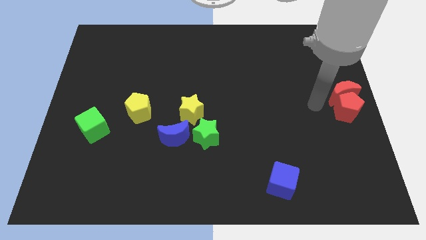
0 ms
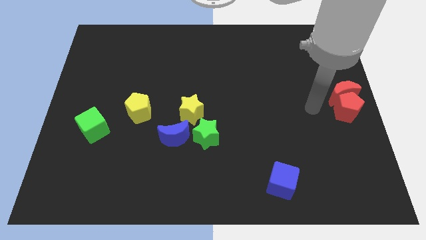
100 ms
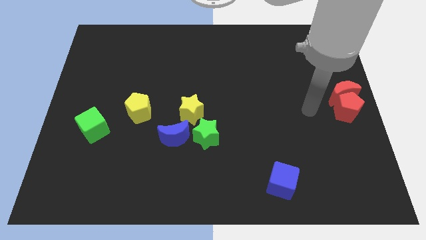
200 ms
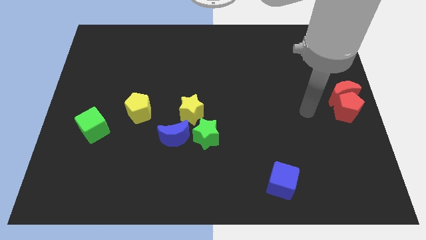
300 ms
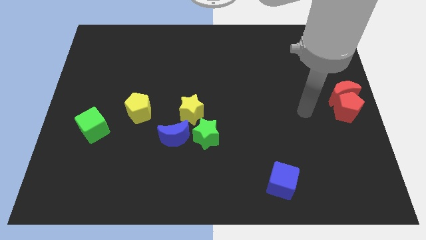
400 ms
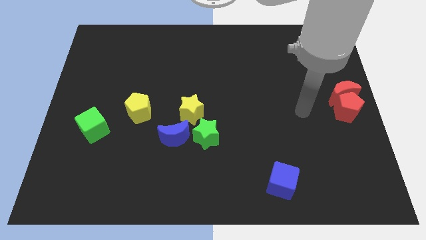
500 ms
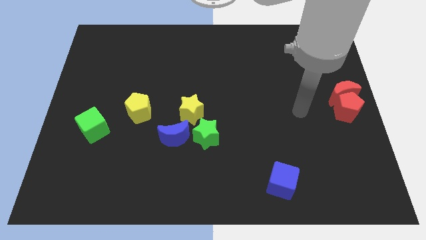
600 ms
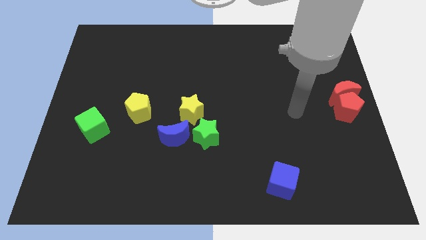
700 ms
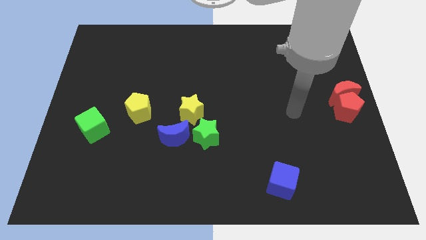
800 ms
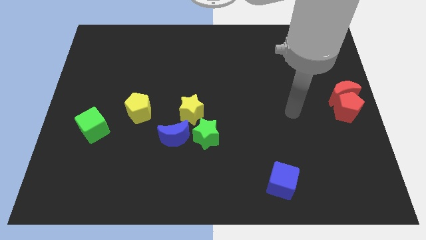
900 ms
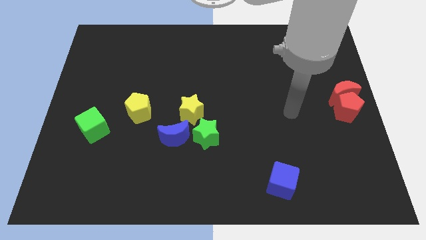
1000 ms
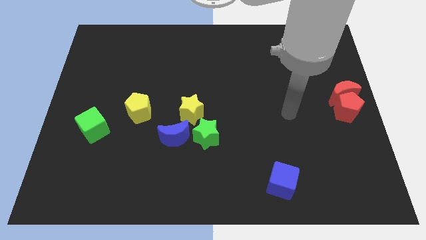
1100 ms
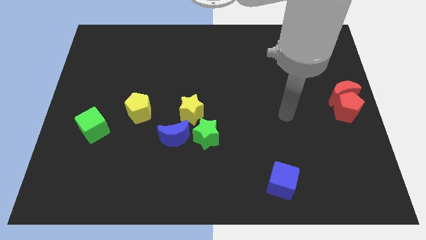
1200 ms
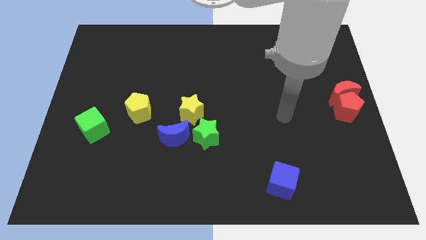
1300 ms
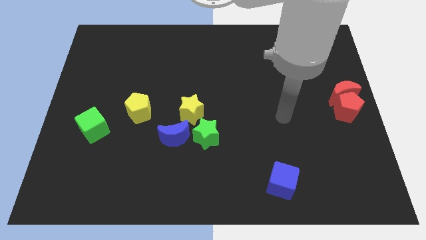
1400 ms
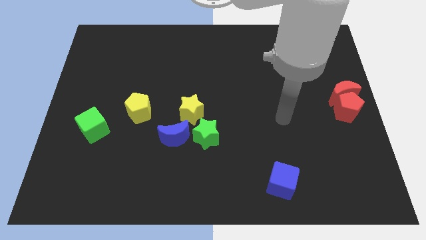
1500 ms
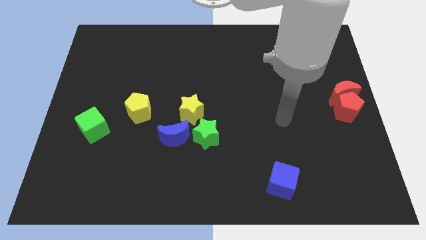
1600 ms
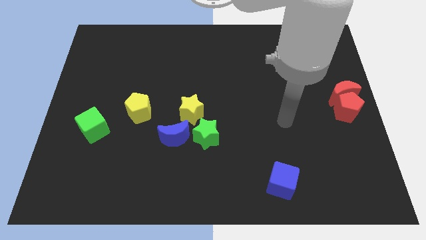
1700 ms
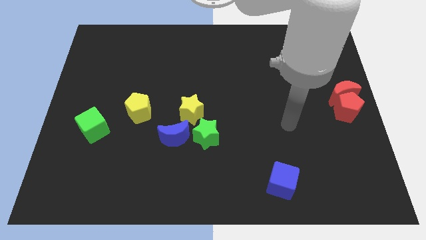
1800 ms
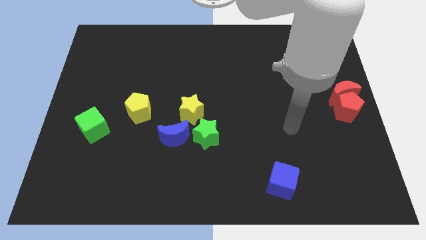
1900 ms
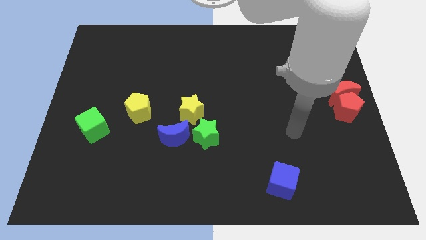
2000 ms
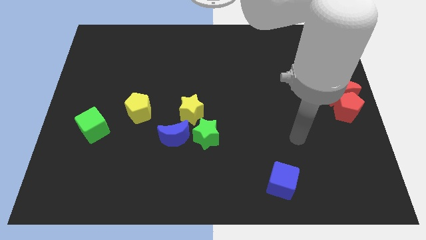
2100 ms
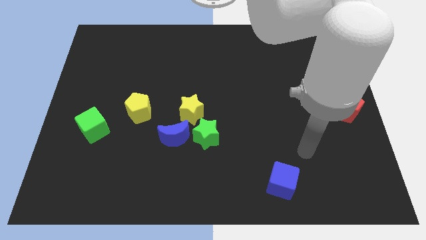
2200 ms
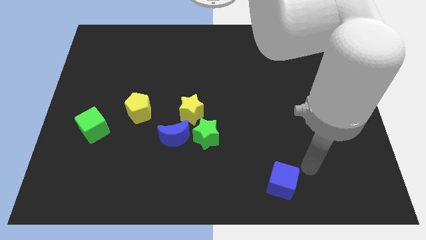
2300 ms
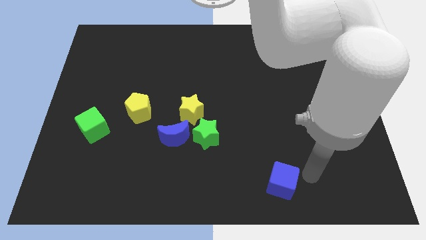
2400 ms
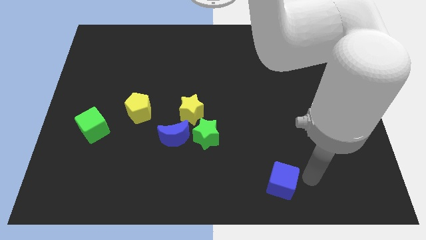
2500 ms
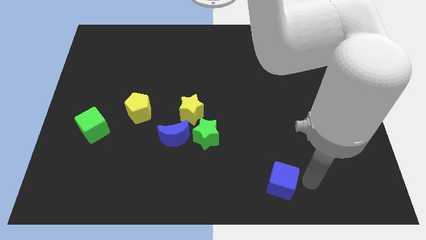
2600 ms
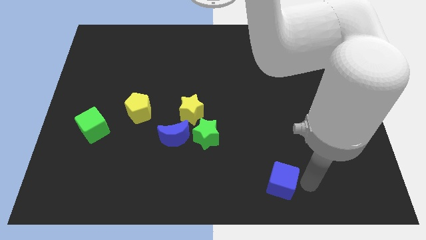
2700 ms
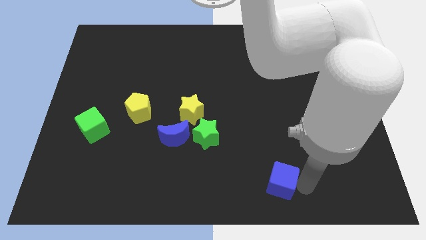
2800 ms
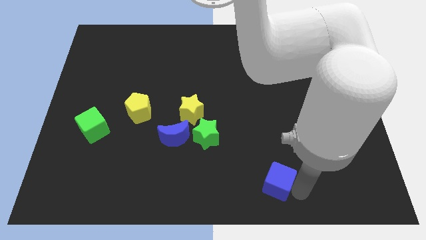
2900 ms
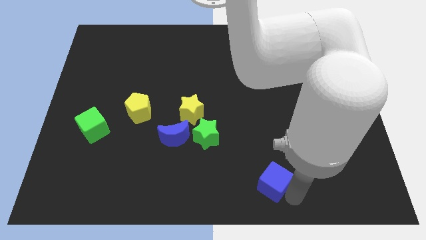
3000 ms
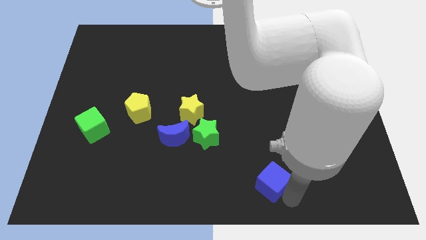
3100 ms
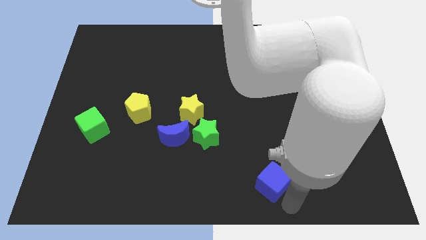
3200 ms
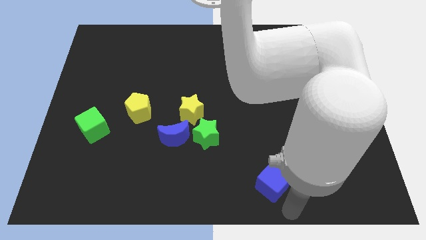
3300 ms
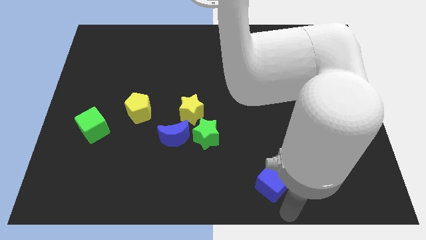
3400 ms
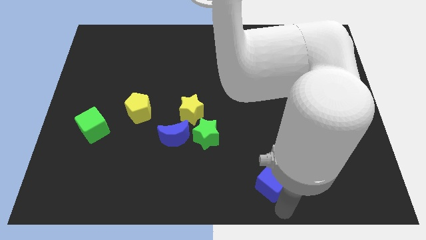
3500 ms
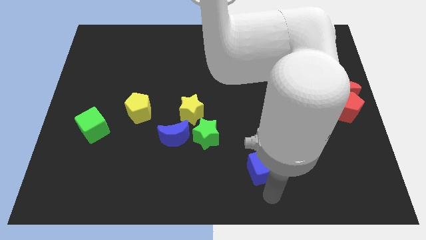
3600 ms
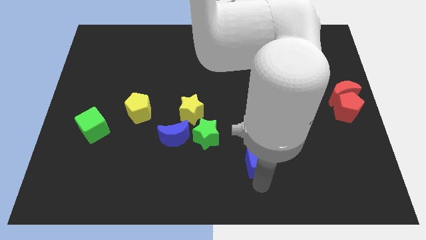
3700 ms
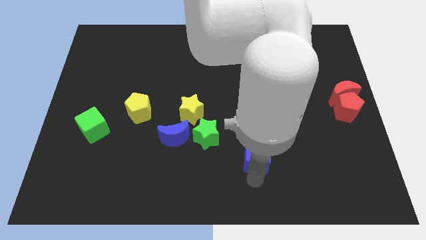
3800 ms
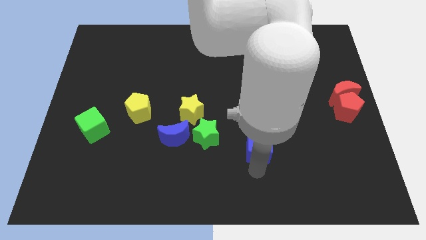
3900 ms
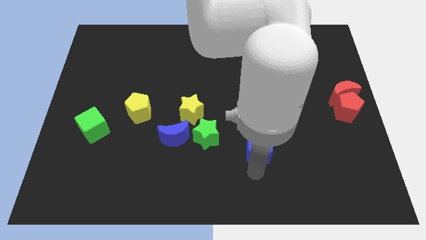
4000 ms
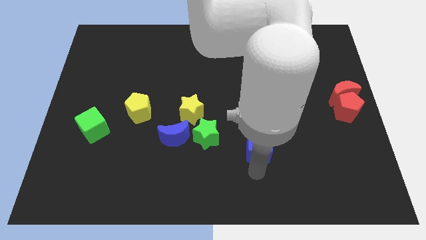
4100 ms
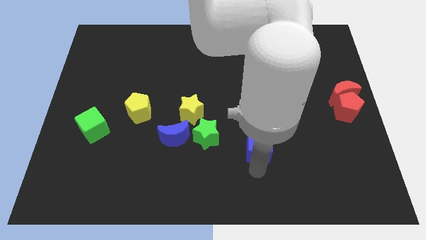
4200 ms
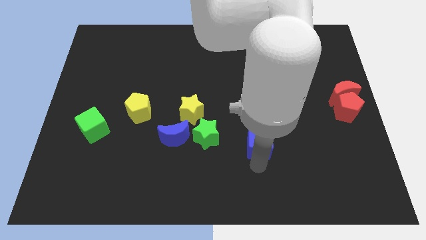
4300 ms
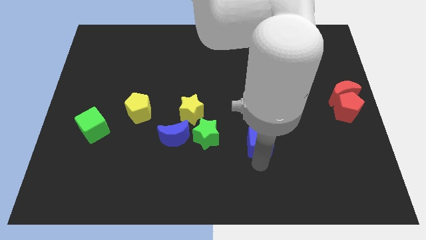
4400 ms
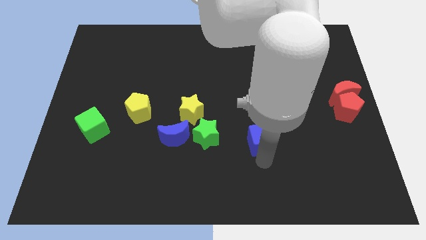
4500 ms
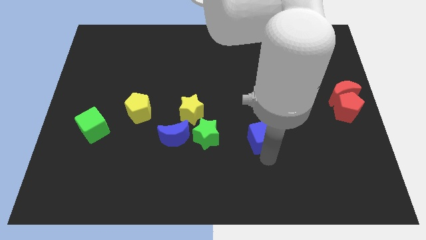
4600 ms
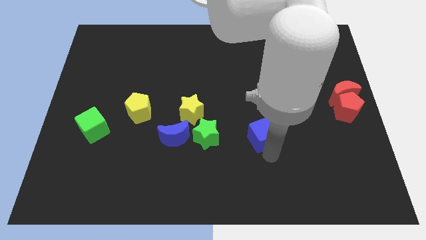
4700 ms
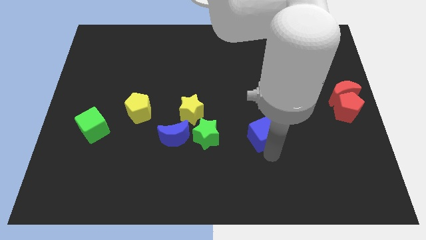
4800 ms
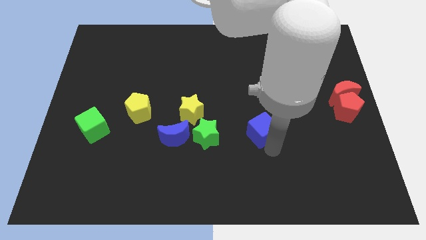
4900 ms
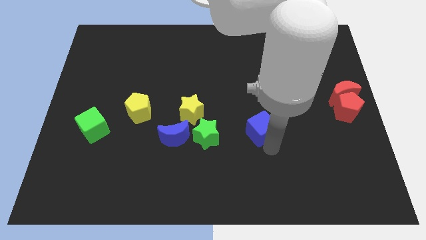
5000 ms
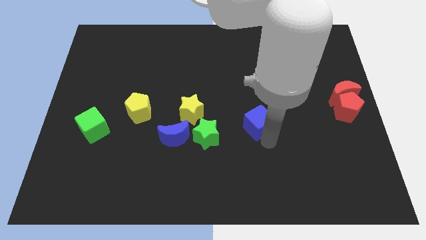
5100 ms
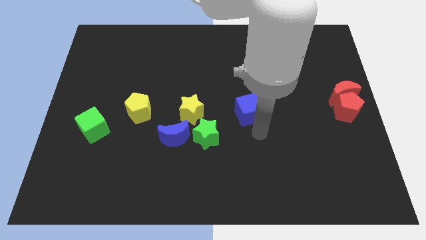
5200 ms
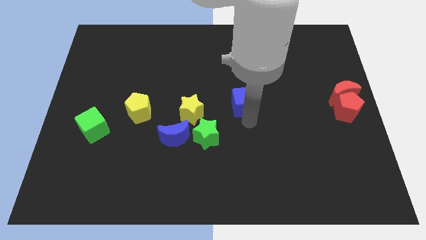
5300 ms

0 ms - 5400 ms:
place the blue cube horizontally on the left side of the red moon

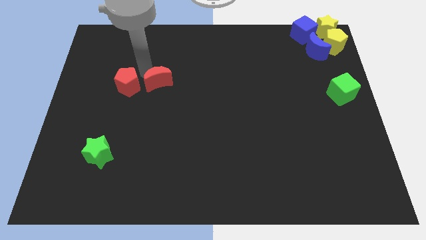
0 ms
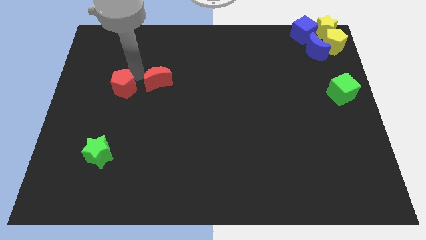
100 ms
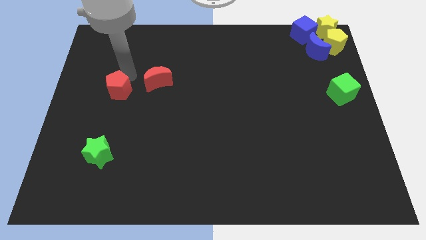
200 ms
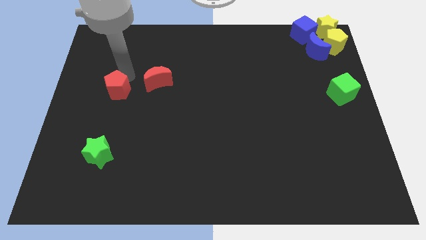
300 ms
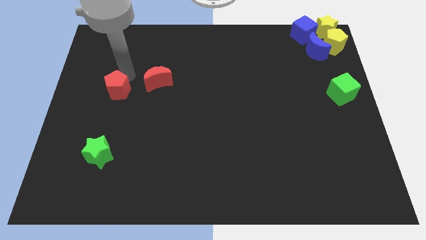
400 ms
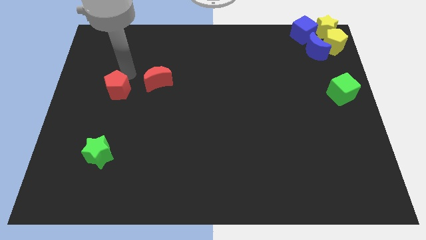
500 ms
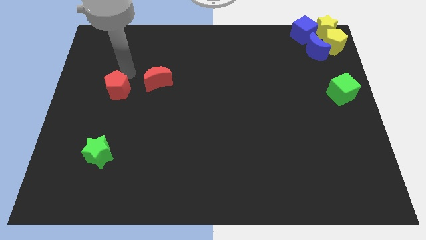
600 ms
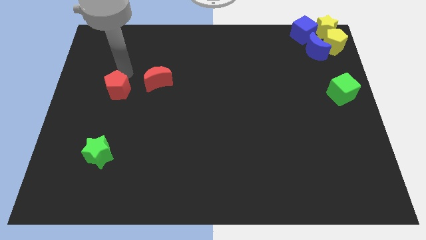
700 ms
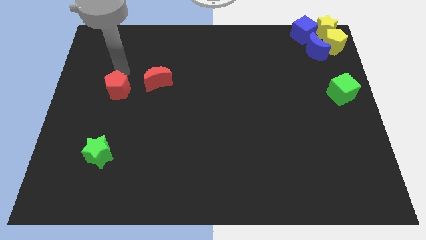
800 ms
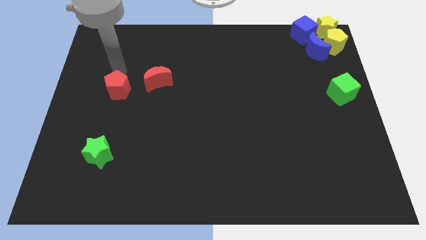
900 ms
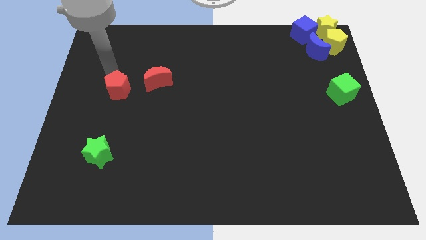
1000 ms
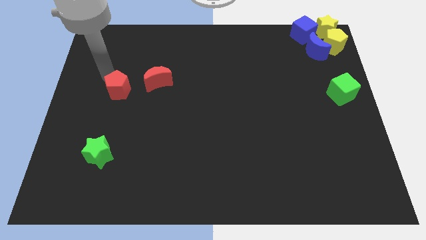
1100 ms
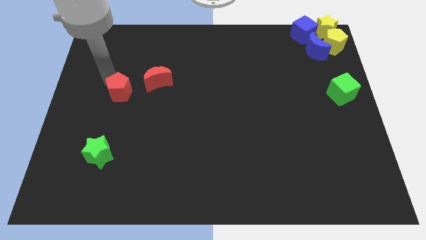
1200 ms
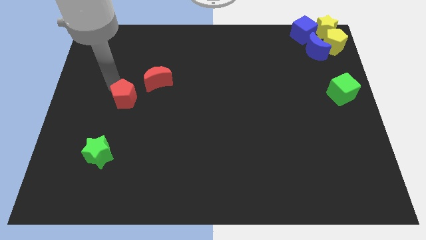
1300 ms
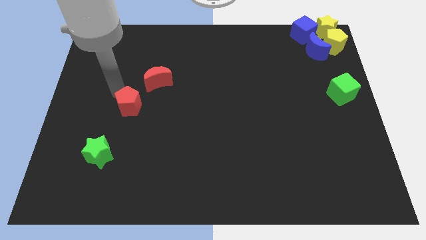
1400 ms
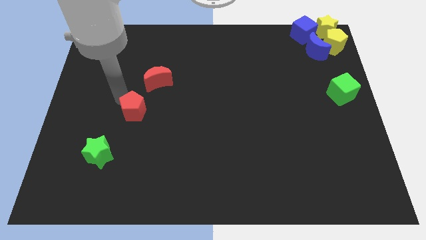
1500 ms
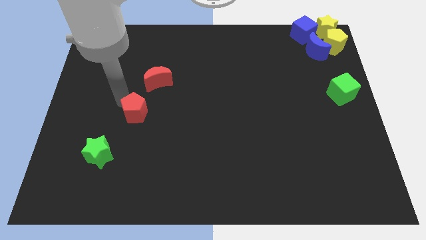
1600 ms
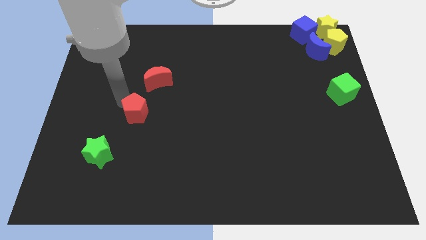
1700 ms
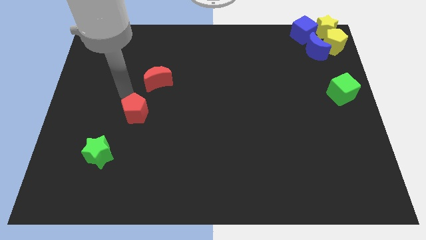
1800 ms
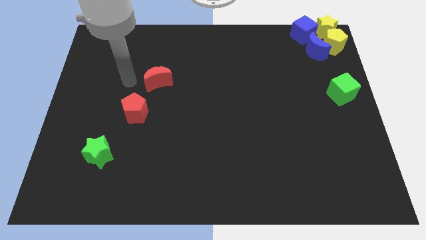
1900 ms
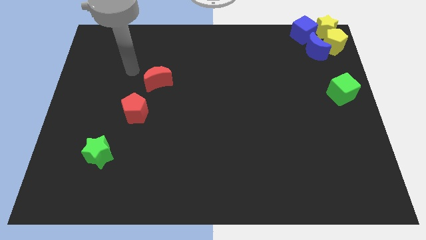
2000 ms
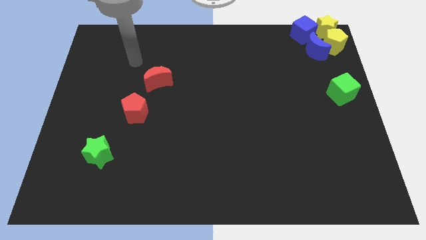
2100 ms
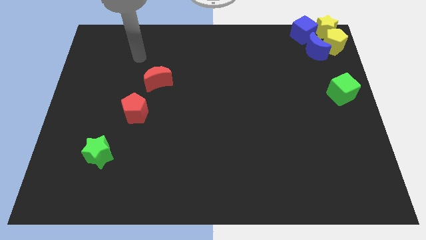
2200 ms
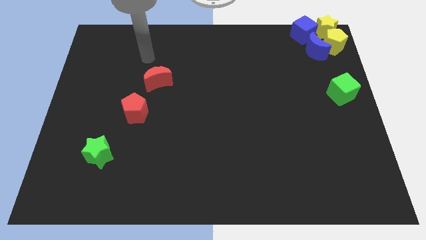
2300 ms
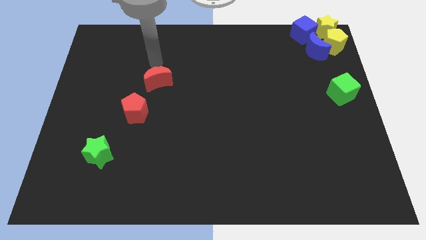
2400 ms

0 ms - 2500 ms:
push the red pentagon under the red crescent

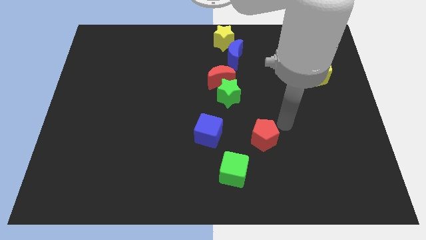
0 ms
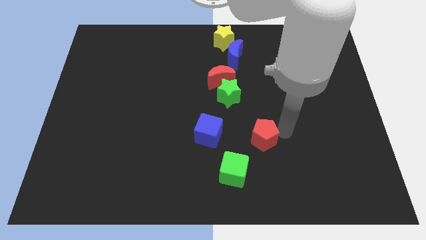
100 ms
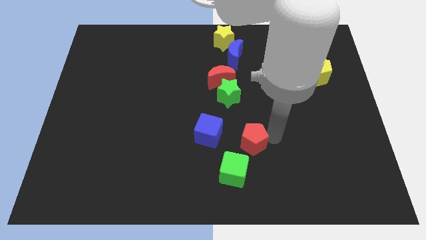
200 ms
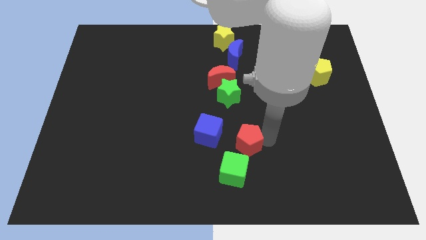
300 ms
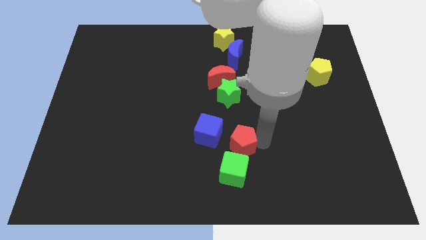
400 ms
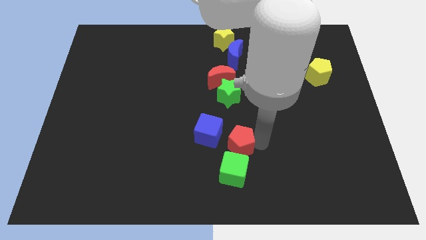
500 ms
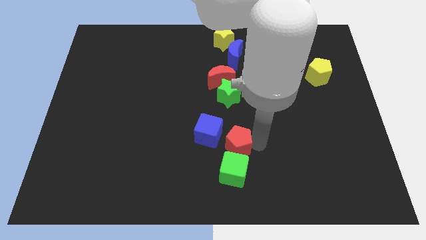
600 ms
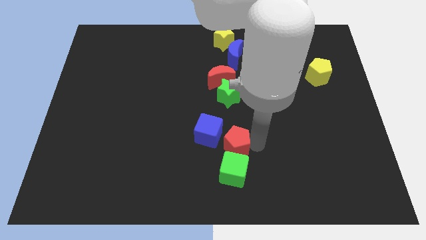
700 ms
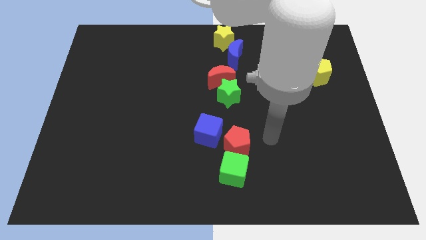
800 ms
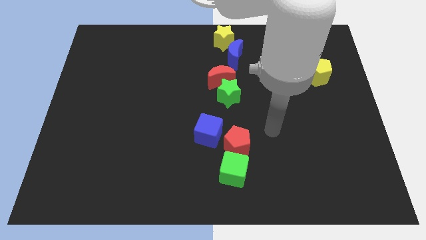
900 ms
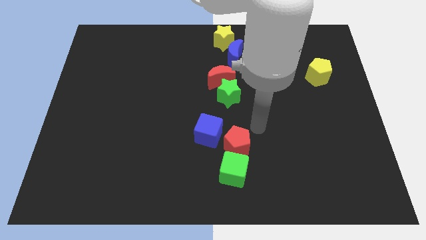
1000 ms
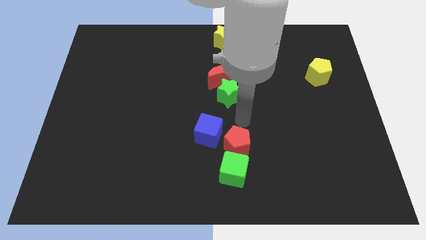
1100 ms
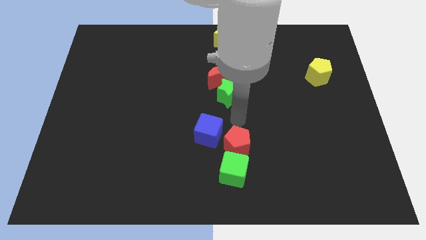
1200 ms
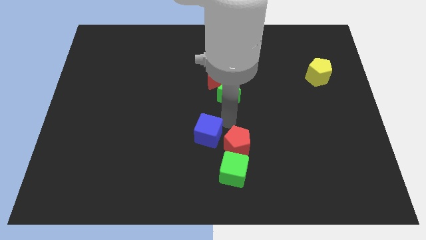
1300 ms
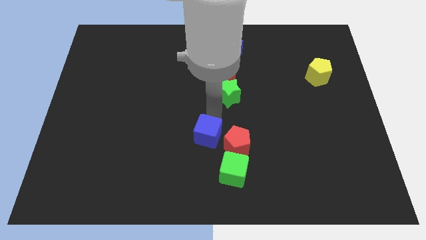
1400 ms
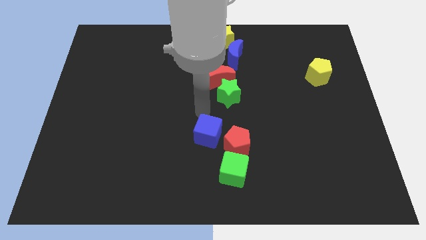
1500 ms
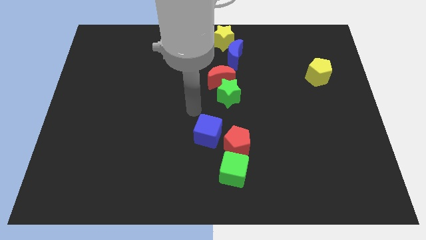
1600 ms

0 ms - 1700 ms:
push the red pentagon to the top of green cube
